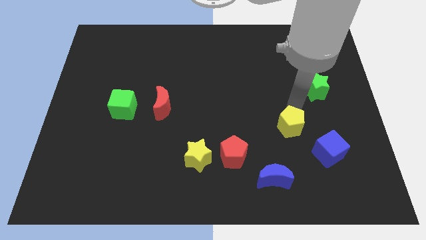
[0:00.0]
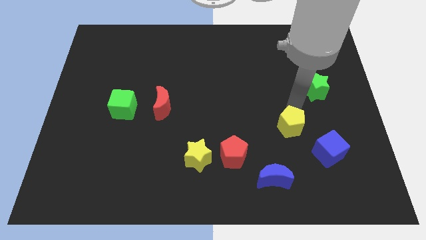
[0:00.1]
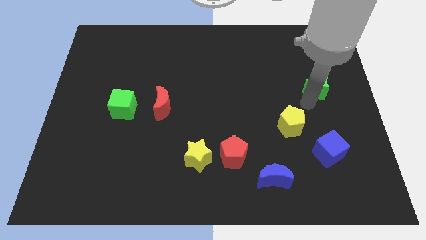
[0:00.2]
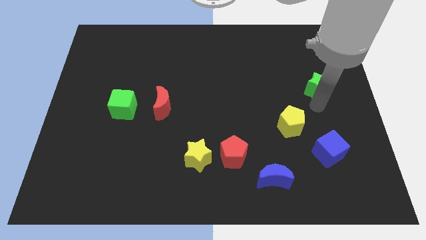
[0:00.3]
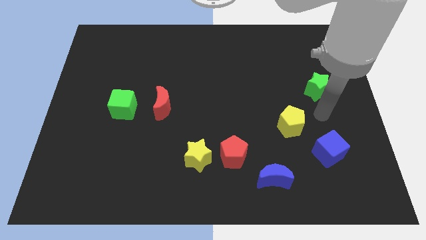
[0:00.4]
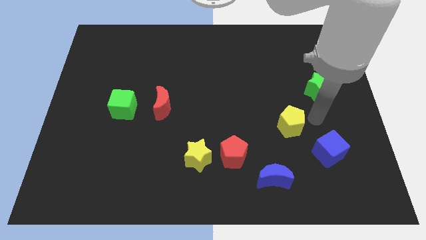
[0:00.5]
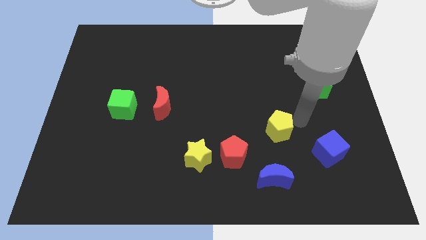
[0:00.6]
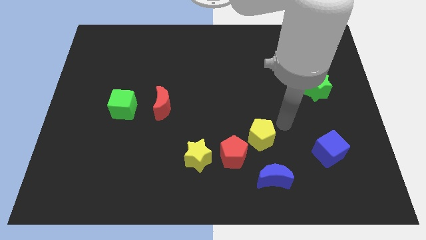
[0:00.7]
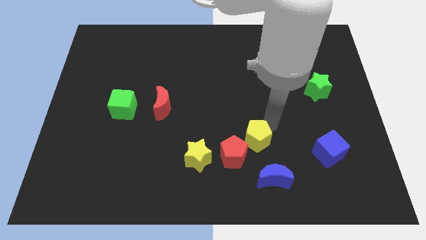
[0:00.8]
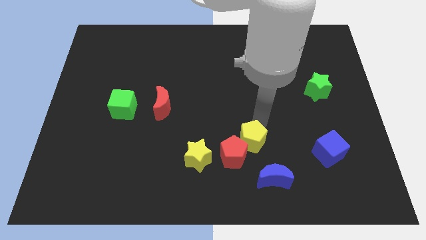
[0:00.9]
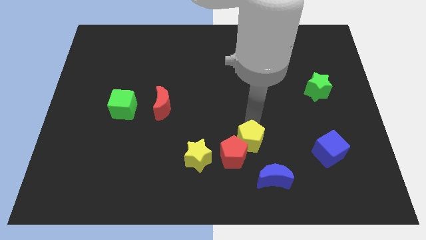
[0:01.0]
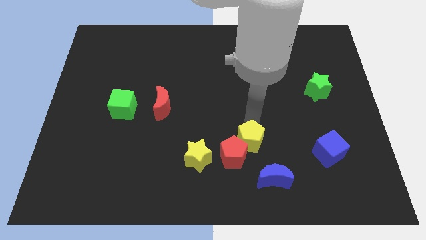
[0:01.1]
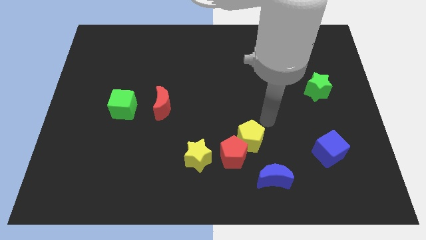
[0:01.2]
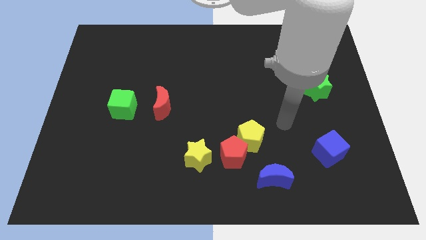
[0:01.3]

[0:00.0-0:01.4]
place the yellow pentagon towards the top right side of the red pentagon

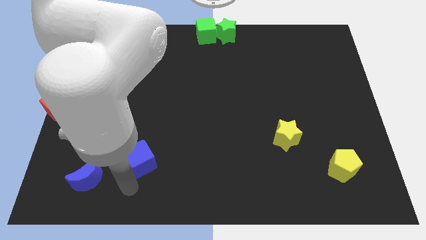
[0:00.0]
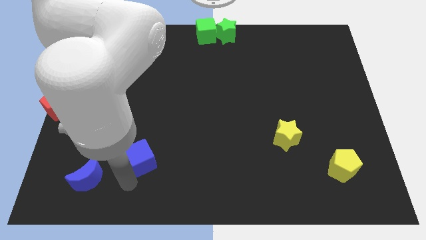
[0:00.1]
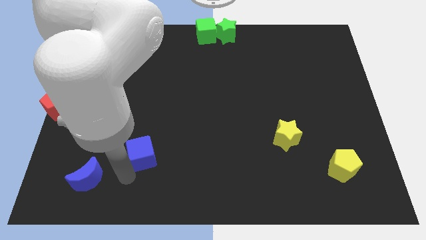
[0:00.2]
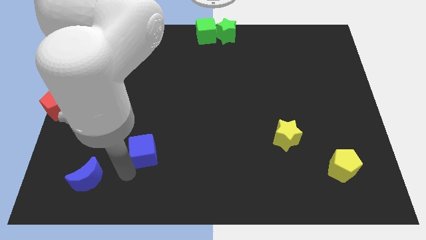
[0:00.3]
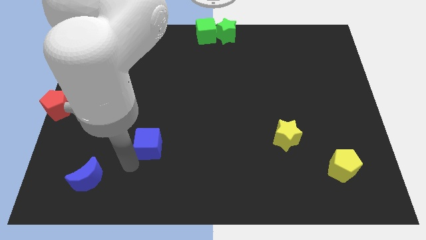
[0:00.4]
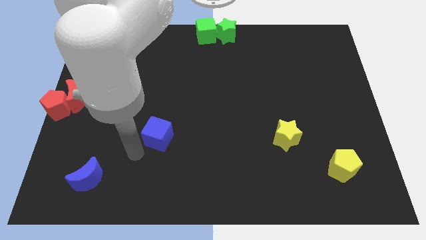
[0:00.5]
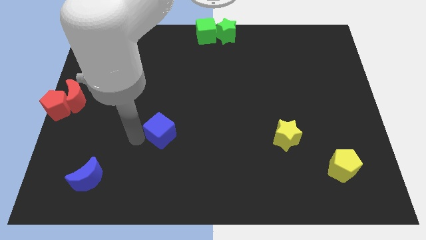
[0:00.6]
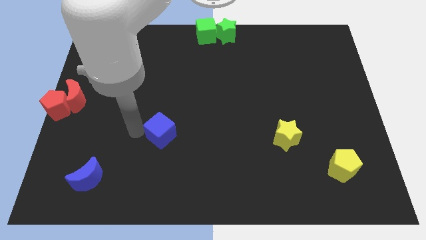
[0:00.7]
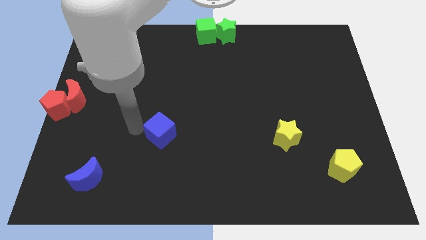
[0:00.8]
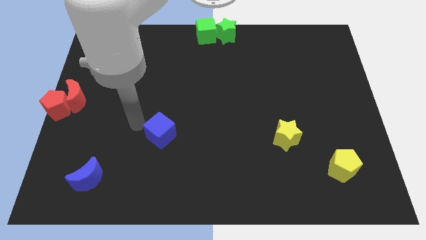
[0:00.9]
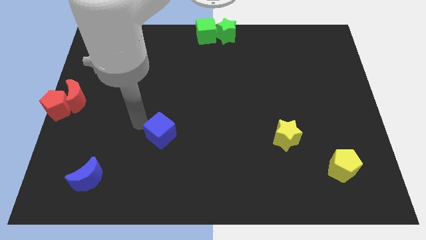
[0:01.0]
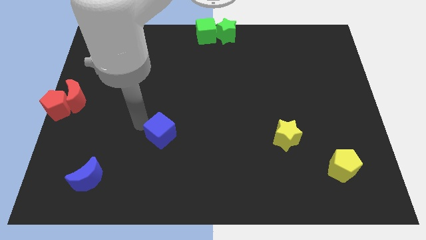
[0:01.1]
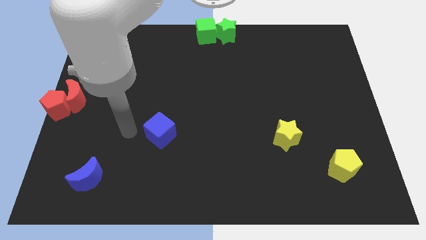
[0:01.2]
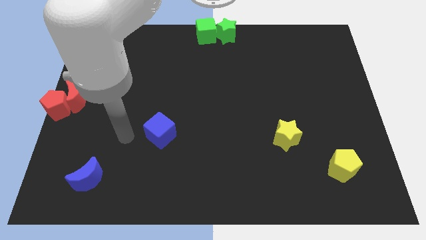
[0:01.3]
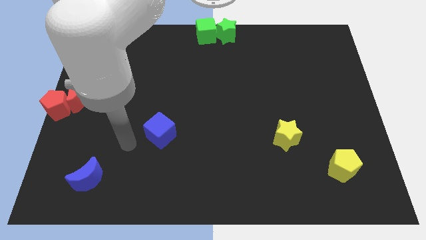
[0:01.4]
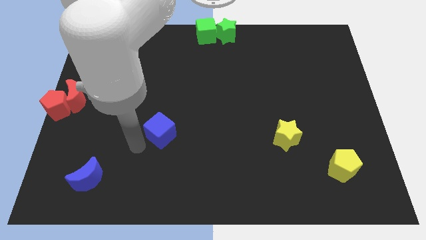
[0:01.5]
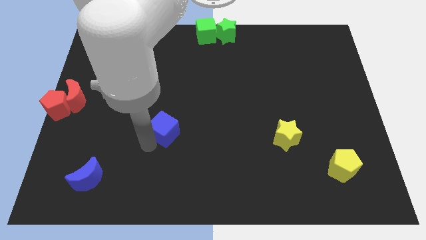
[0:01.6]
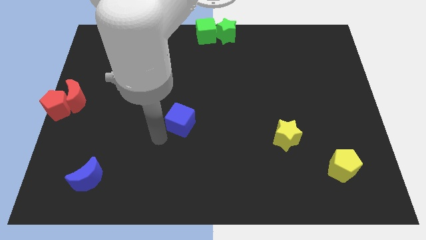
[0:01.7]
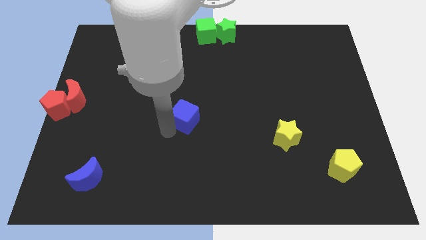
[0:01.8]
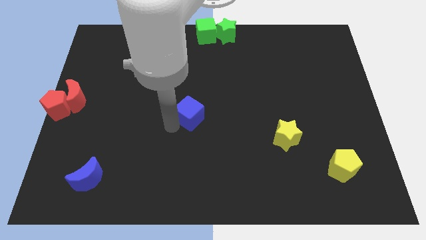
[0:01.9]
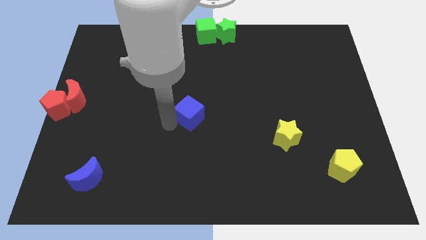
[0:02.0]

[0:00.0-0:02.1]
move the blue cube towards the center of the board

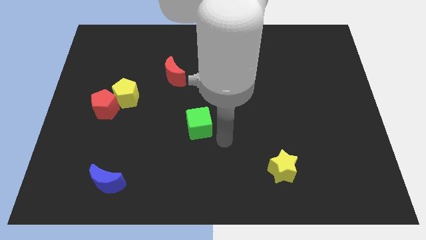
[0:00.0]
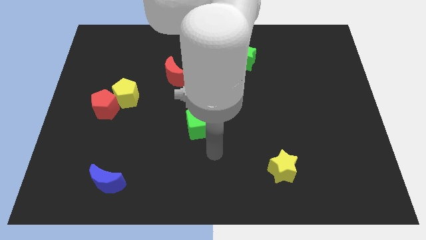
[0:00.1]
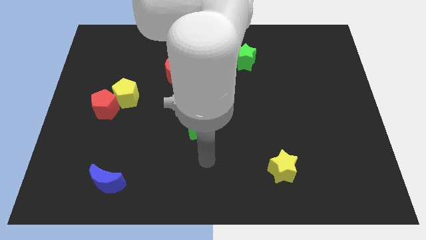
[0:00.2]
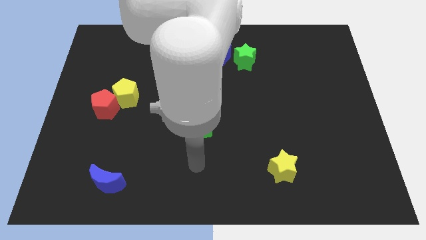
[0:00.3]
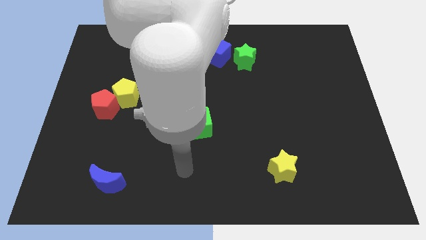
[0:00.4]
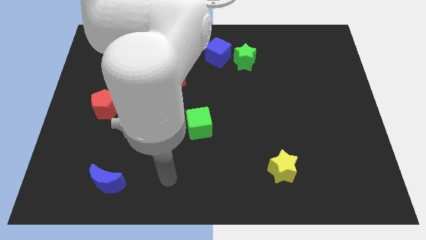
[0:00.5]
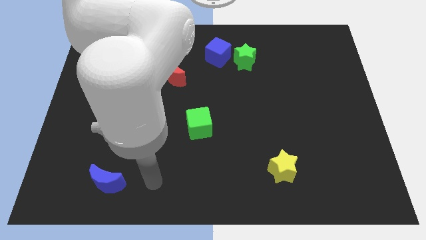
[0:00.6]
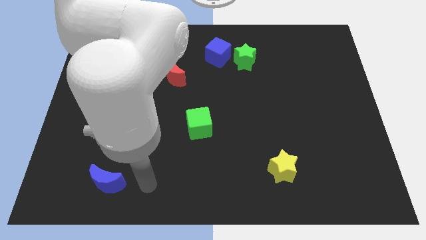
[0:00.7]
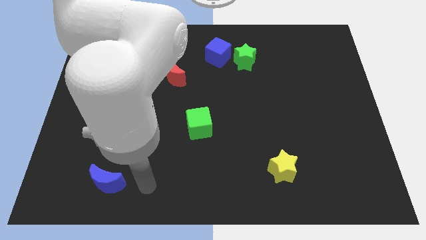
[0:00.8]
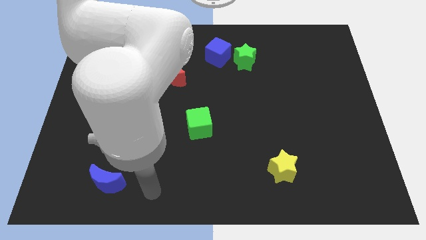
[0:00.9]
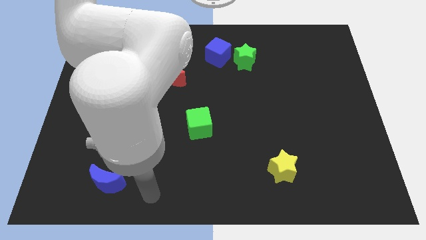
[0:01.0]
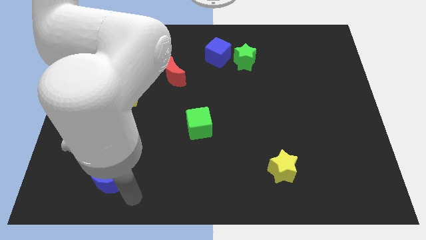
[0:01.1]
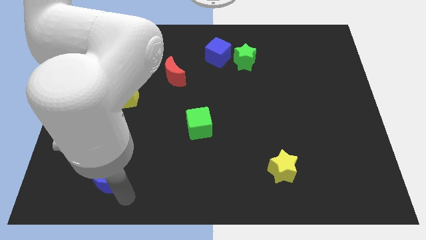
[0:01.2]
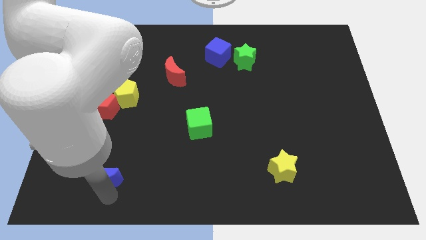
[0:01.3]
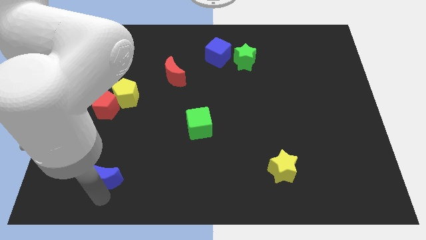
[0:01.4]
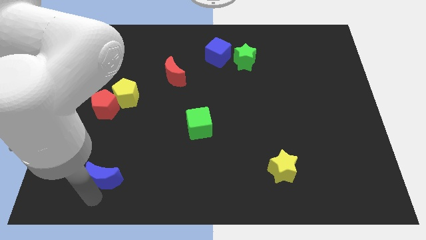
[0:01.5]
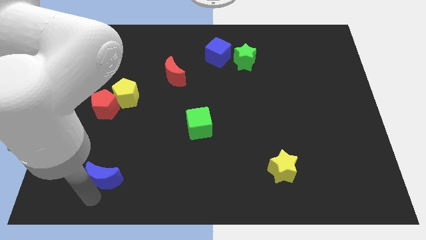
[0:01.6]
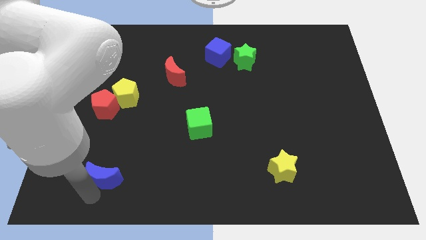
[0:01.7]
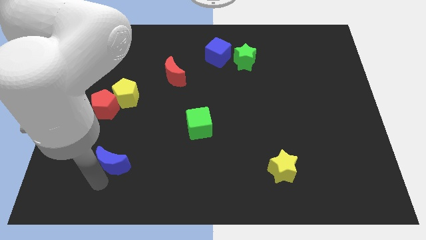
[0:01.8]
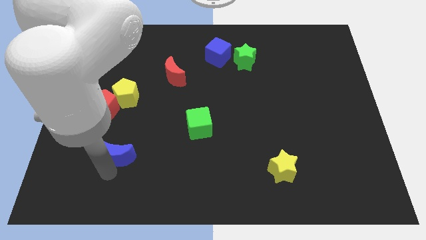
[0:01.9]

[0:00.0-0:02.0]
move the blue crescent towards yellow pentagon

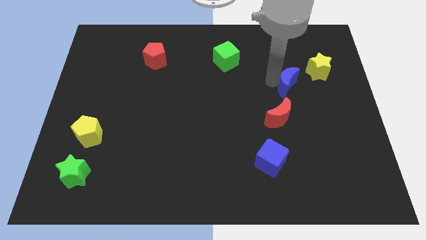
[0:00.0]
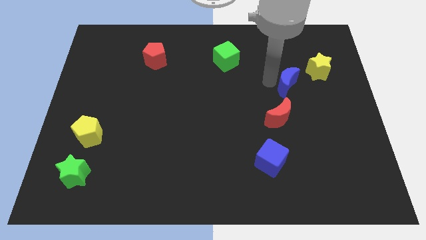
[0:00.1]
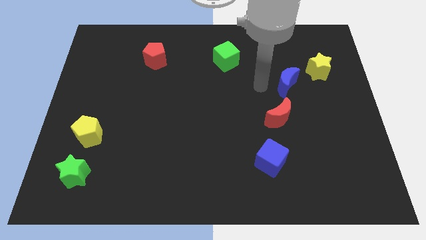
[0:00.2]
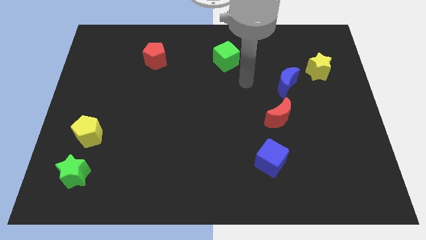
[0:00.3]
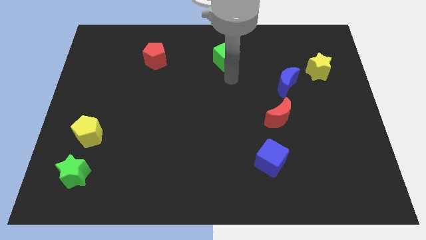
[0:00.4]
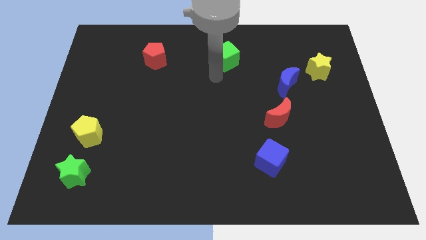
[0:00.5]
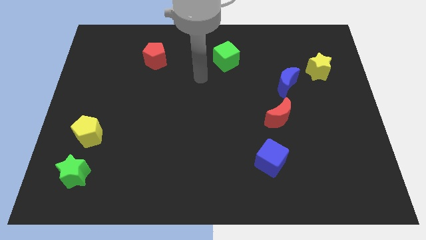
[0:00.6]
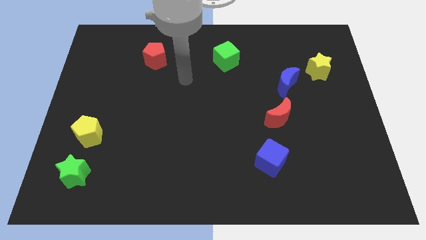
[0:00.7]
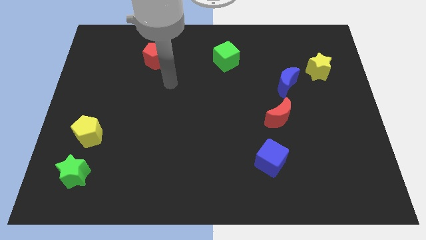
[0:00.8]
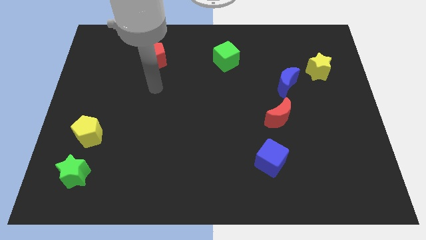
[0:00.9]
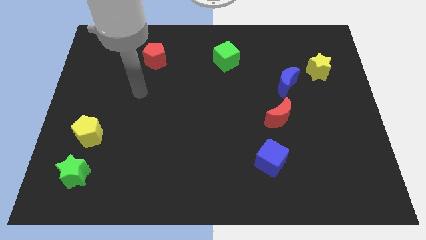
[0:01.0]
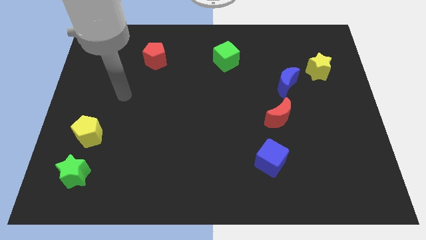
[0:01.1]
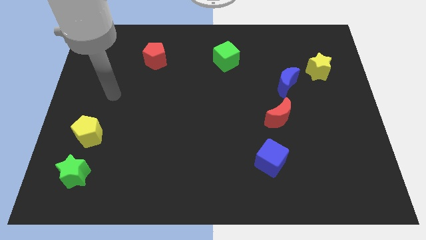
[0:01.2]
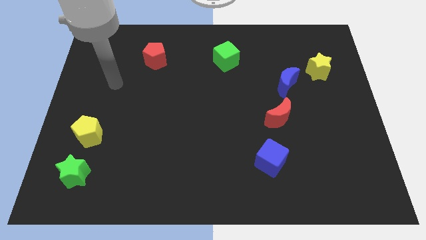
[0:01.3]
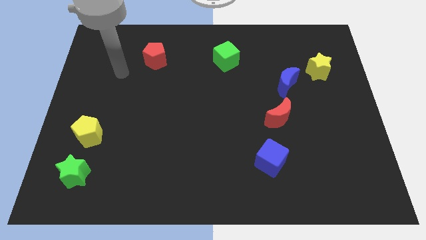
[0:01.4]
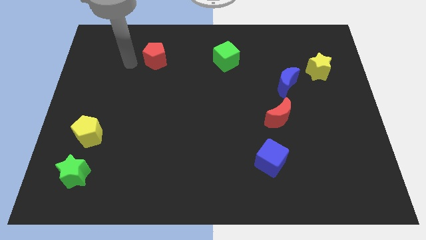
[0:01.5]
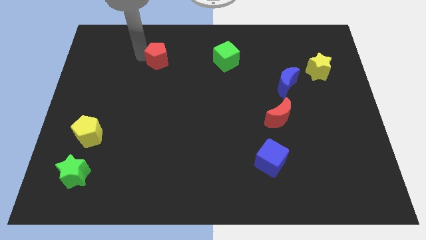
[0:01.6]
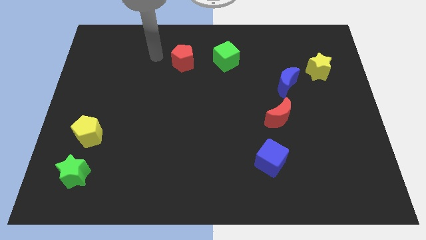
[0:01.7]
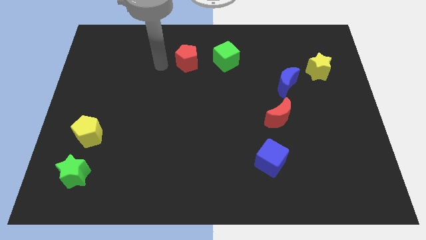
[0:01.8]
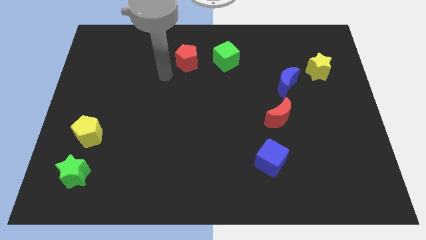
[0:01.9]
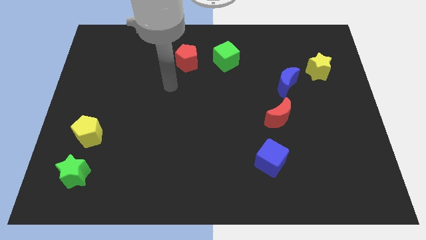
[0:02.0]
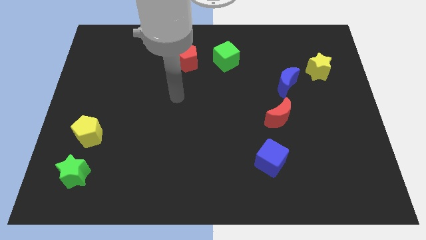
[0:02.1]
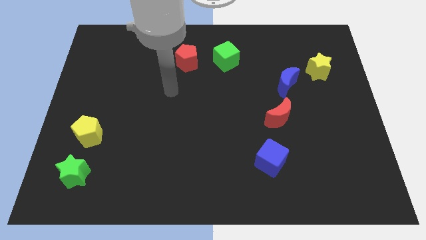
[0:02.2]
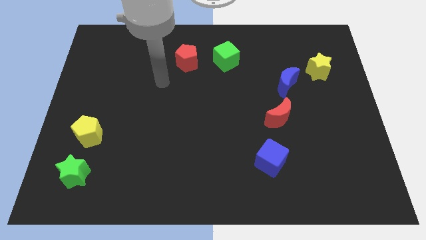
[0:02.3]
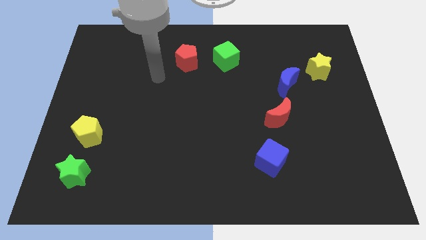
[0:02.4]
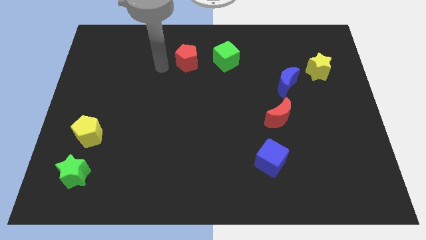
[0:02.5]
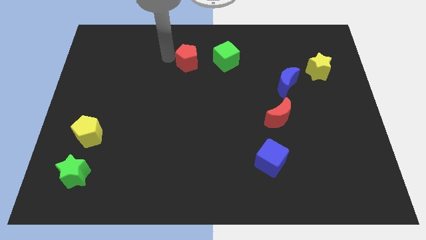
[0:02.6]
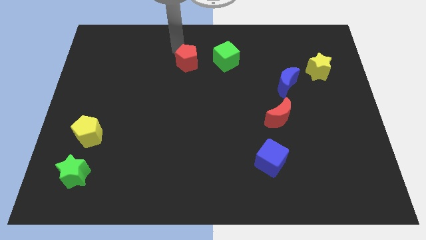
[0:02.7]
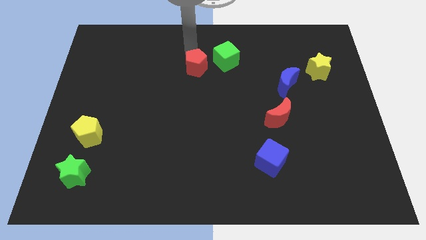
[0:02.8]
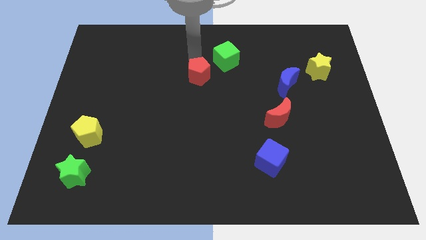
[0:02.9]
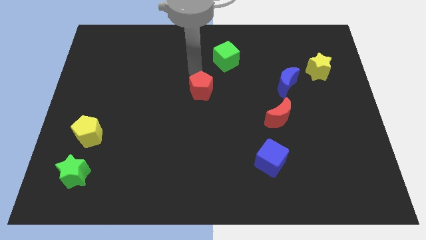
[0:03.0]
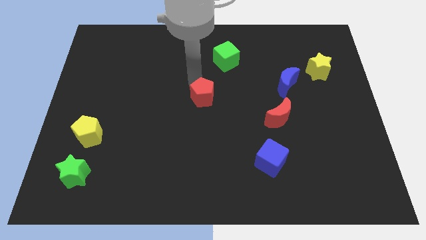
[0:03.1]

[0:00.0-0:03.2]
push the red pentagon to the center of the board

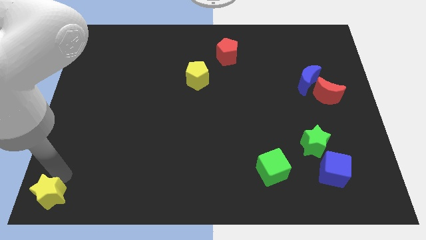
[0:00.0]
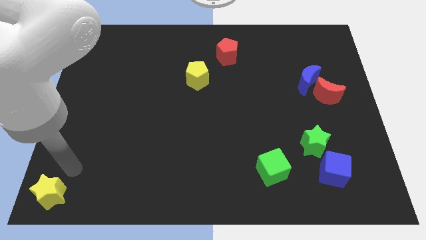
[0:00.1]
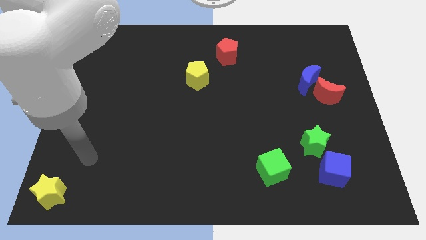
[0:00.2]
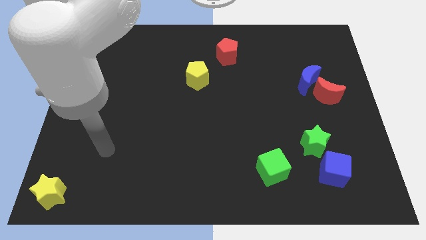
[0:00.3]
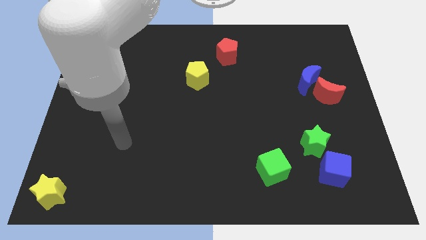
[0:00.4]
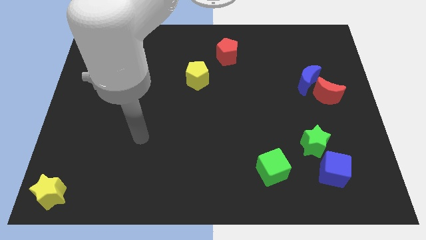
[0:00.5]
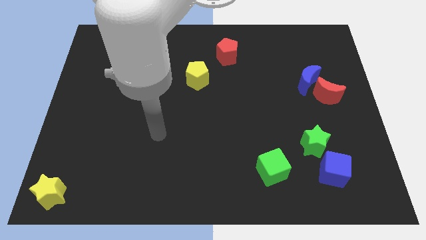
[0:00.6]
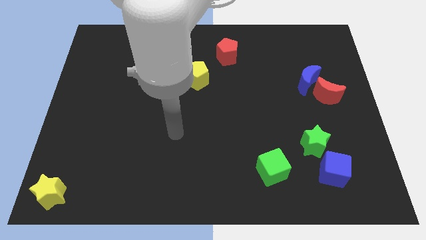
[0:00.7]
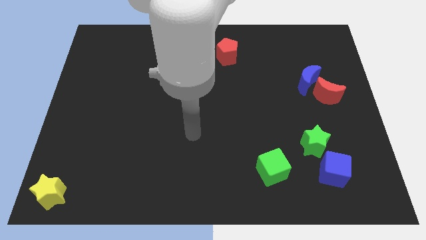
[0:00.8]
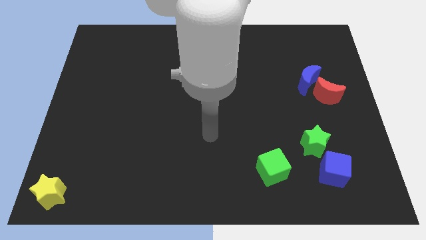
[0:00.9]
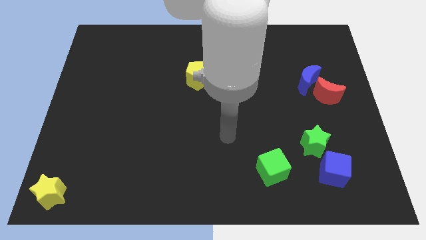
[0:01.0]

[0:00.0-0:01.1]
move the arm away from the yellow star
